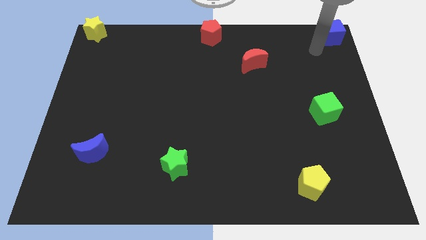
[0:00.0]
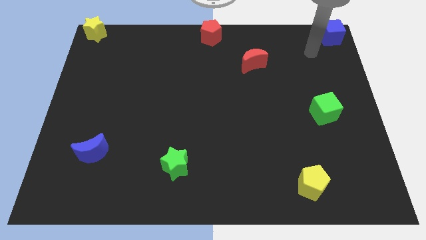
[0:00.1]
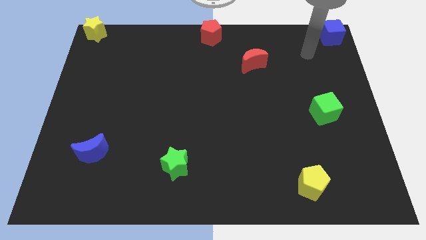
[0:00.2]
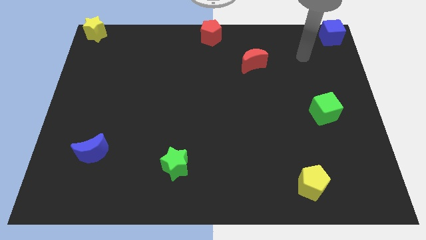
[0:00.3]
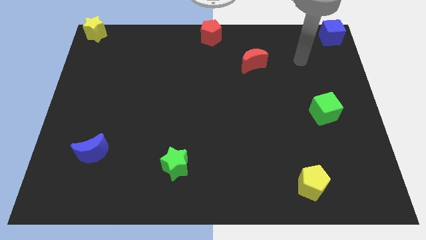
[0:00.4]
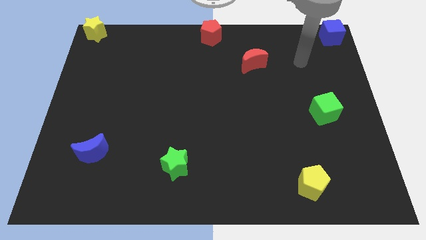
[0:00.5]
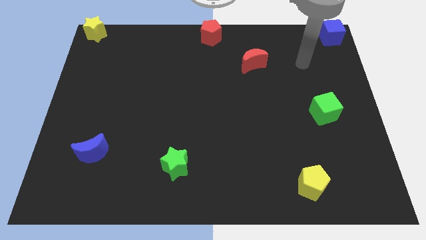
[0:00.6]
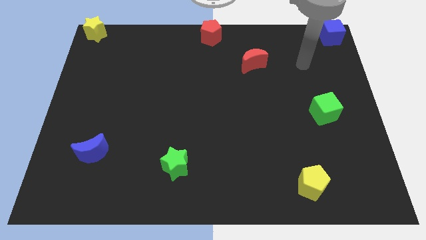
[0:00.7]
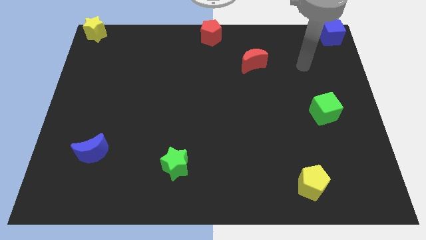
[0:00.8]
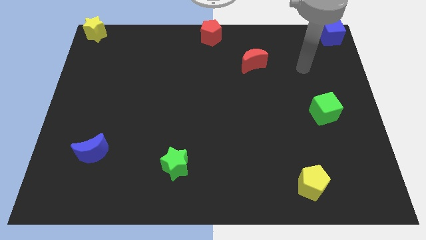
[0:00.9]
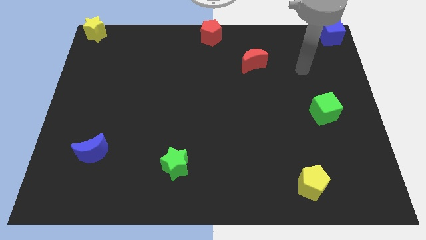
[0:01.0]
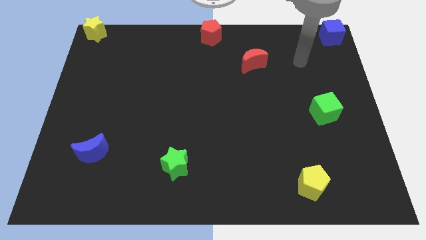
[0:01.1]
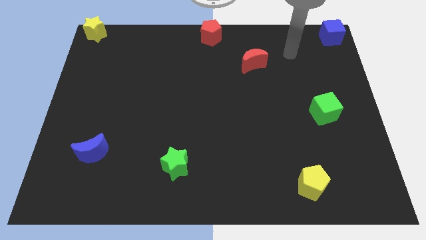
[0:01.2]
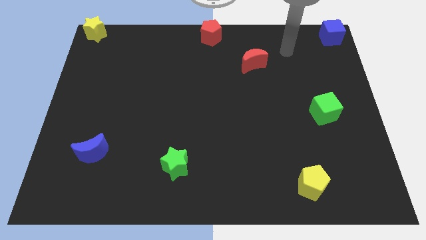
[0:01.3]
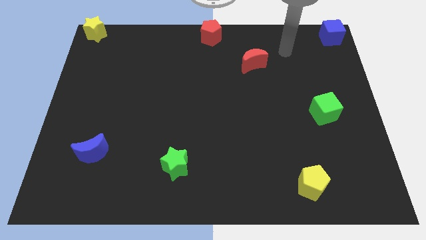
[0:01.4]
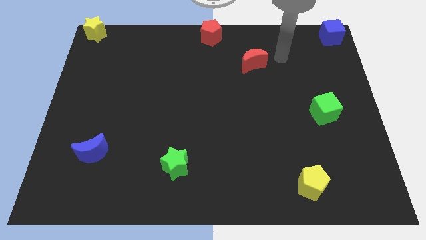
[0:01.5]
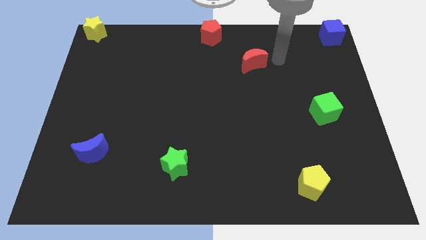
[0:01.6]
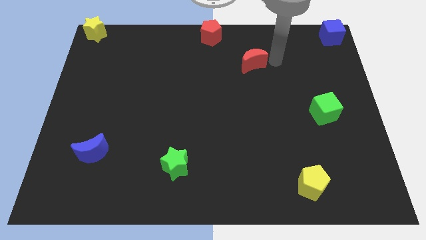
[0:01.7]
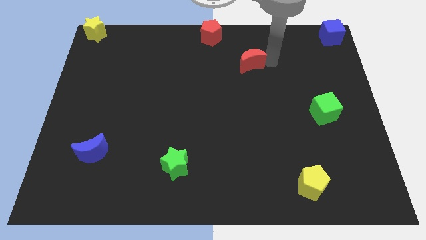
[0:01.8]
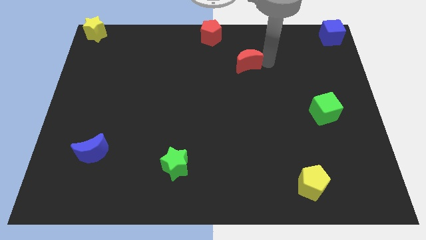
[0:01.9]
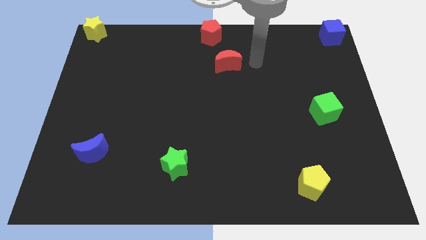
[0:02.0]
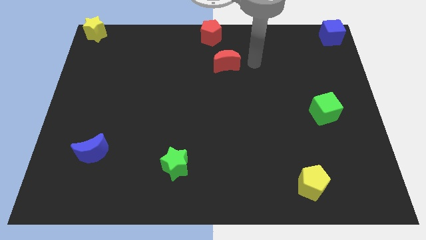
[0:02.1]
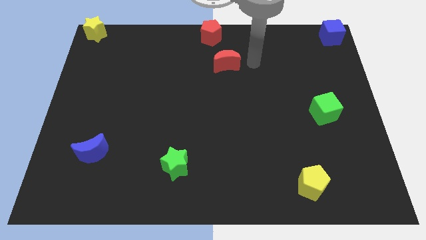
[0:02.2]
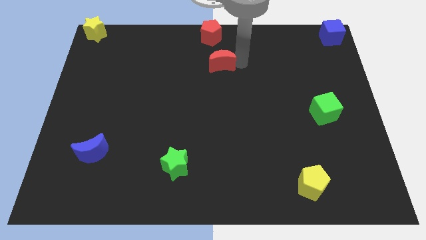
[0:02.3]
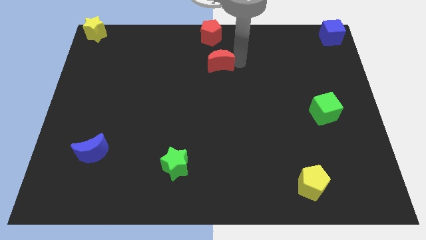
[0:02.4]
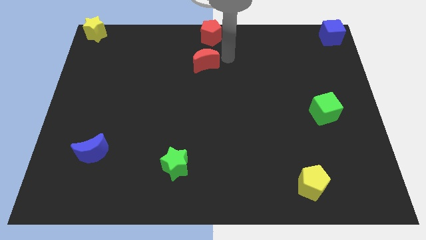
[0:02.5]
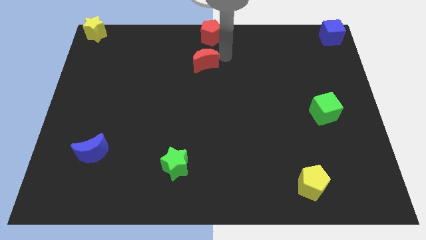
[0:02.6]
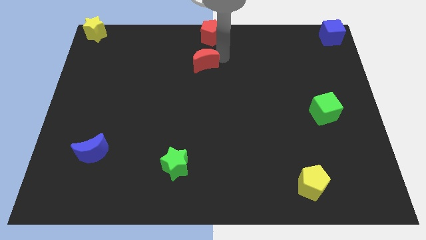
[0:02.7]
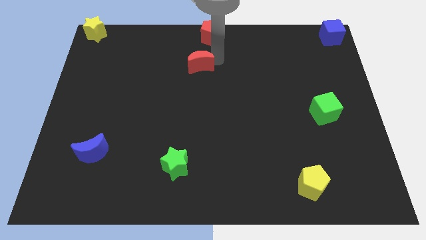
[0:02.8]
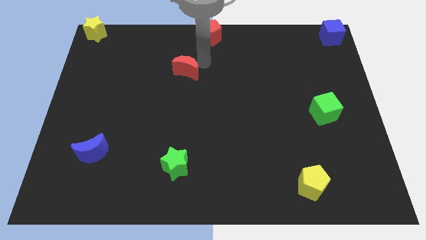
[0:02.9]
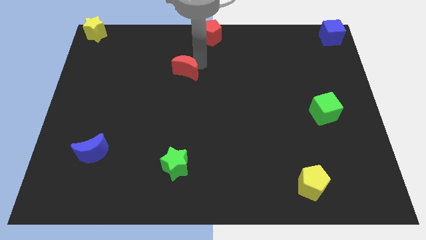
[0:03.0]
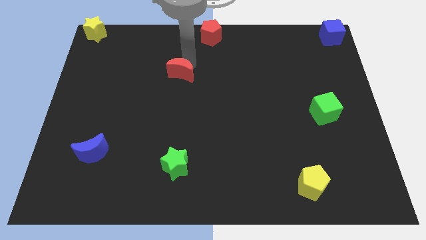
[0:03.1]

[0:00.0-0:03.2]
push the red crescent vertically above the green star

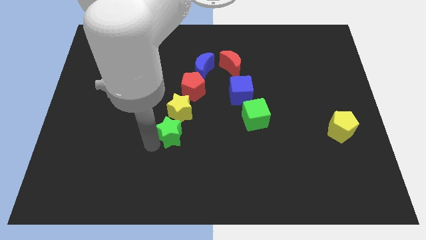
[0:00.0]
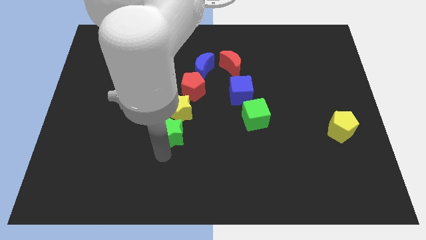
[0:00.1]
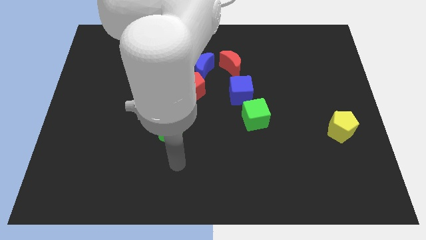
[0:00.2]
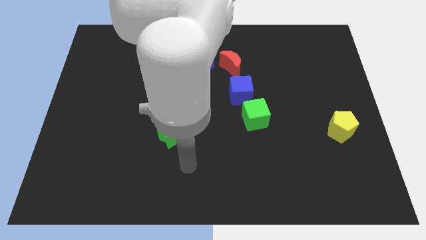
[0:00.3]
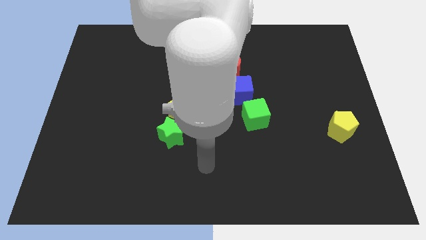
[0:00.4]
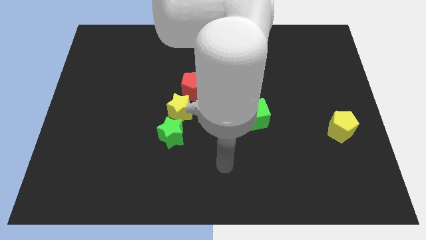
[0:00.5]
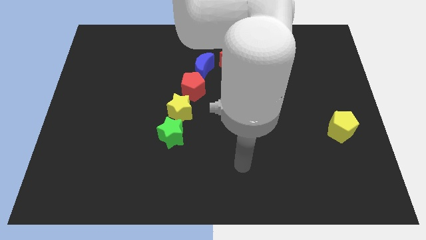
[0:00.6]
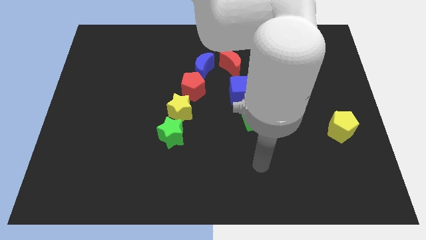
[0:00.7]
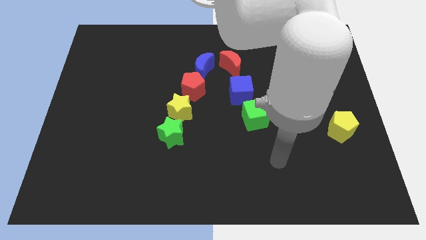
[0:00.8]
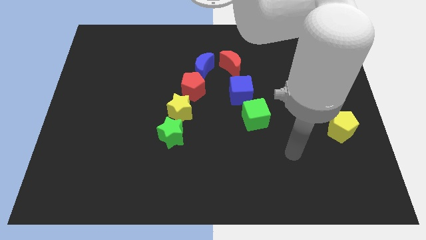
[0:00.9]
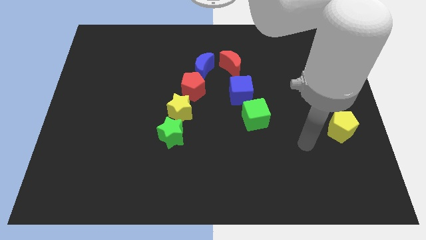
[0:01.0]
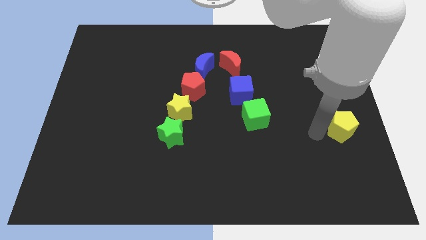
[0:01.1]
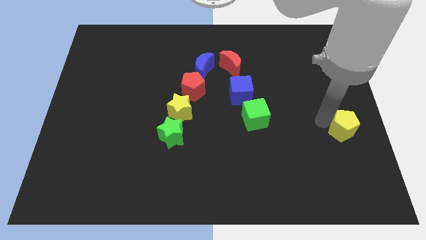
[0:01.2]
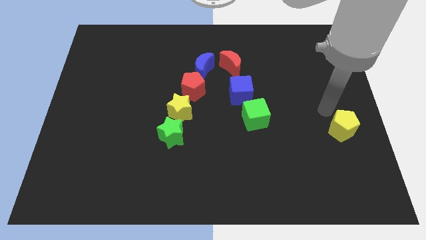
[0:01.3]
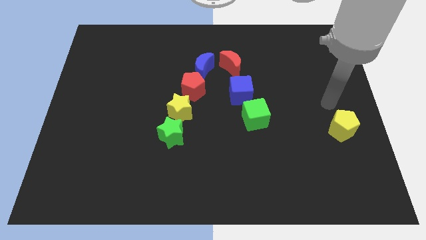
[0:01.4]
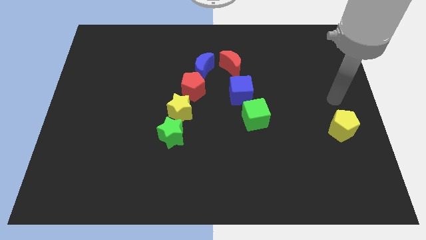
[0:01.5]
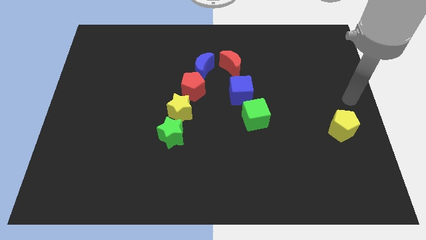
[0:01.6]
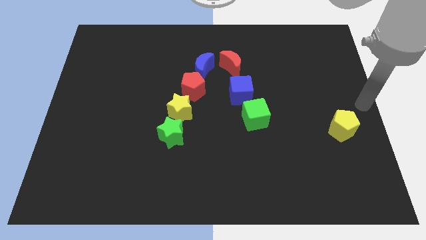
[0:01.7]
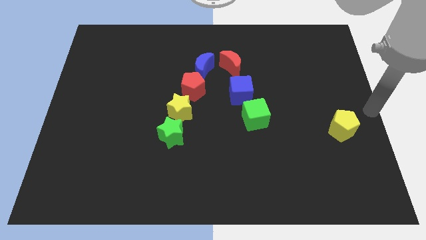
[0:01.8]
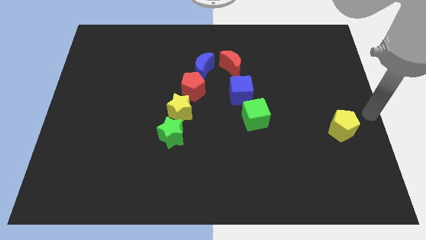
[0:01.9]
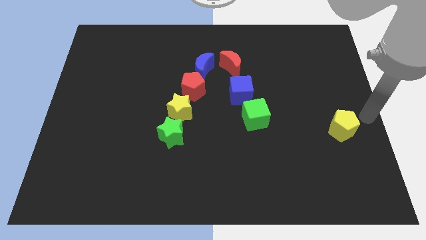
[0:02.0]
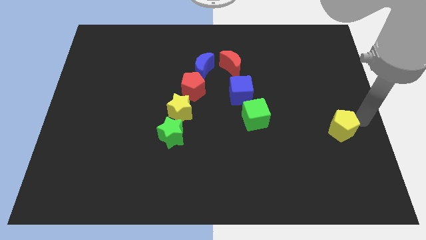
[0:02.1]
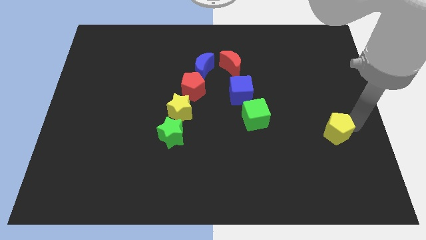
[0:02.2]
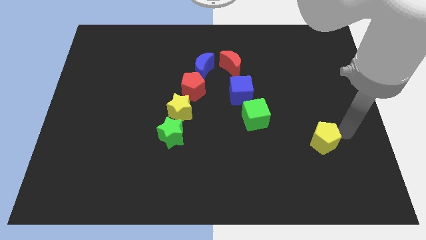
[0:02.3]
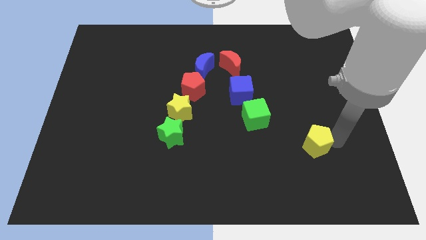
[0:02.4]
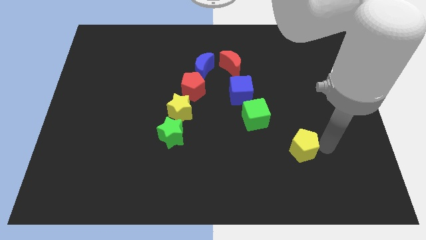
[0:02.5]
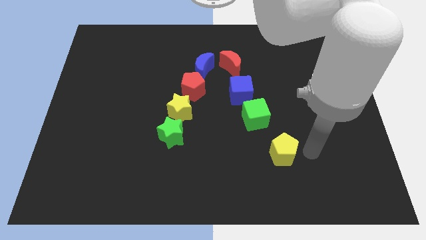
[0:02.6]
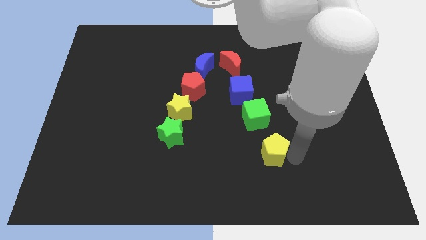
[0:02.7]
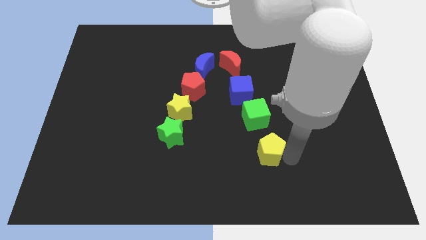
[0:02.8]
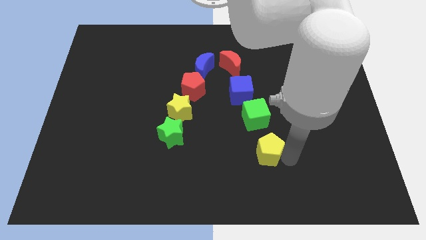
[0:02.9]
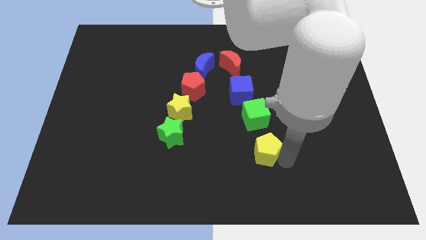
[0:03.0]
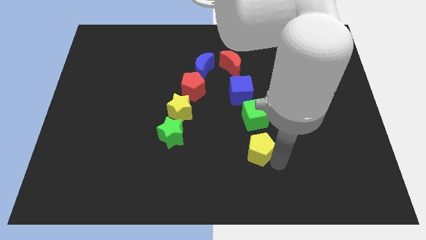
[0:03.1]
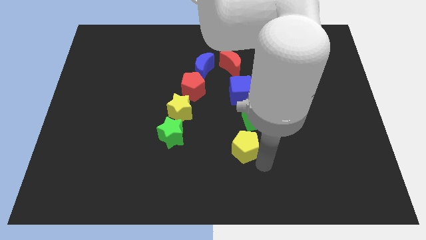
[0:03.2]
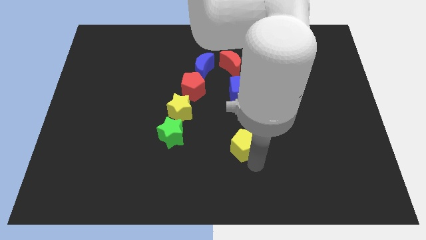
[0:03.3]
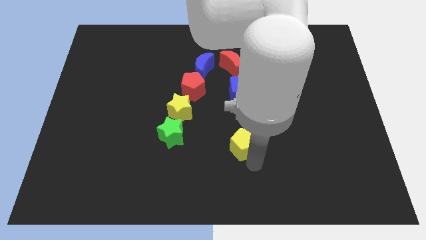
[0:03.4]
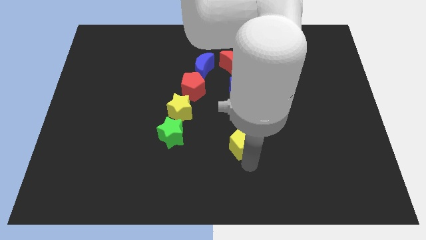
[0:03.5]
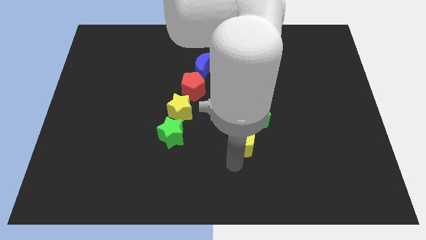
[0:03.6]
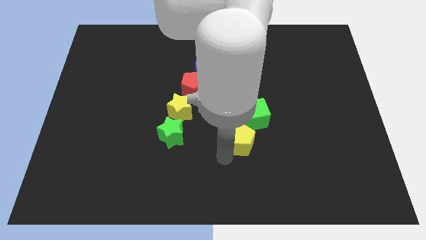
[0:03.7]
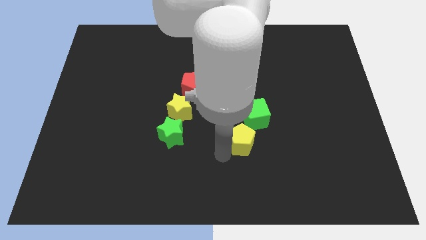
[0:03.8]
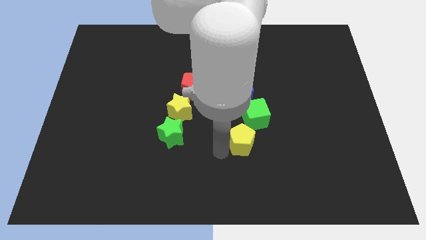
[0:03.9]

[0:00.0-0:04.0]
slide the yellow pentagon near to the bottom side of the green cube

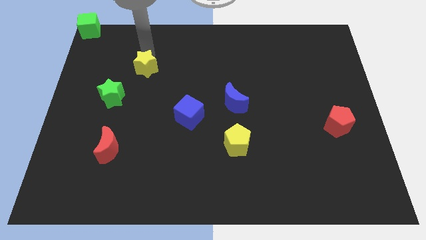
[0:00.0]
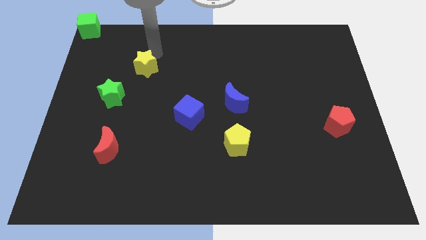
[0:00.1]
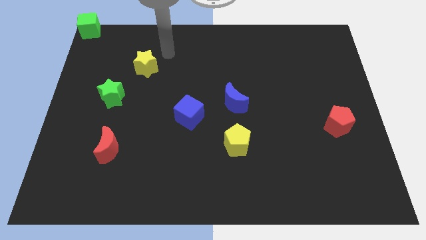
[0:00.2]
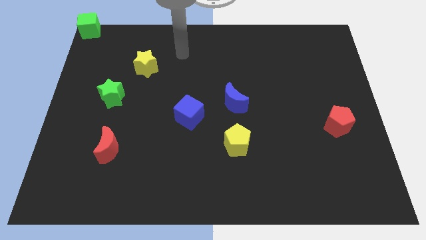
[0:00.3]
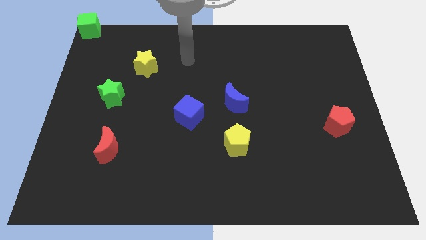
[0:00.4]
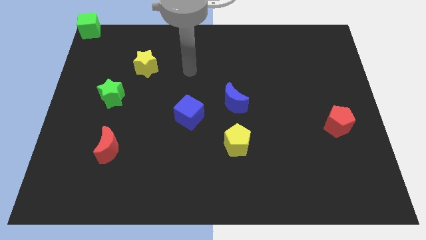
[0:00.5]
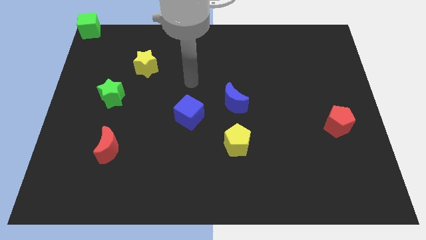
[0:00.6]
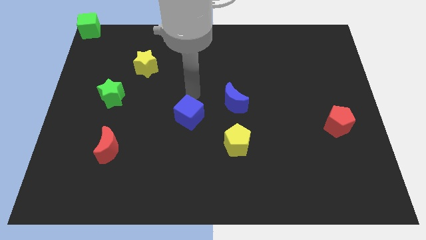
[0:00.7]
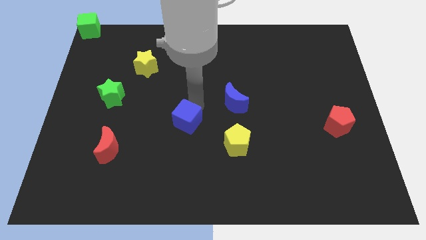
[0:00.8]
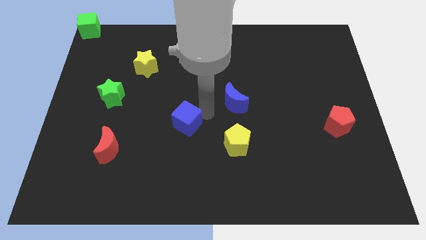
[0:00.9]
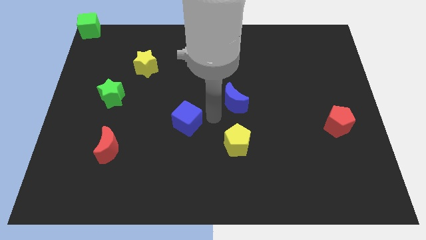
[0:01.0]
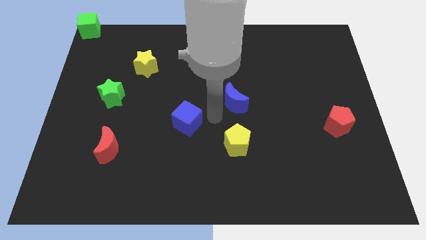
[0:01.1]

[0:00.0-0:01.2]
slightly move the blue moon to the right side

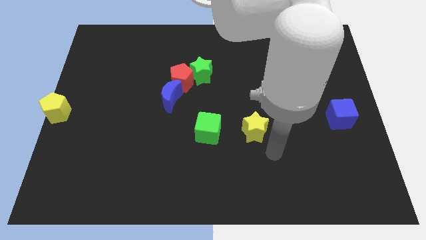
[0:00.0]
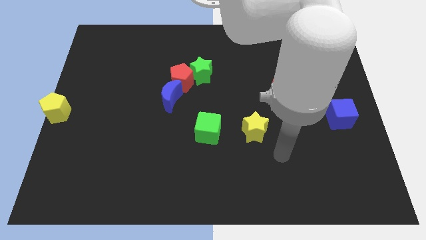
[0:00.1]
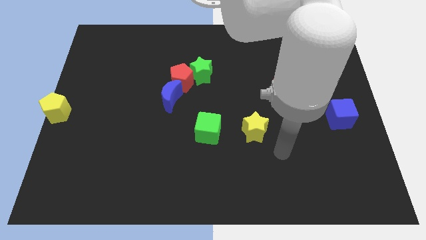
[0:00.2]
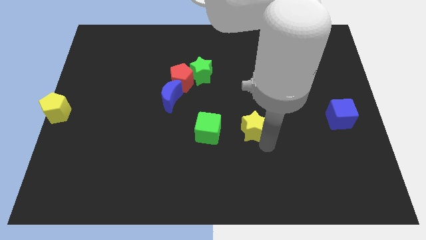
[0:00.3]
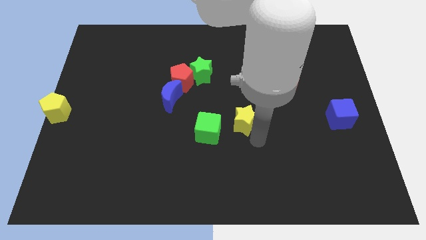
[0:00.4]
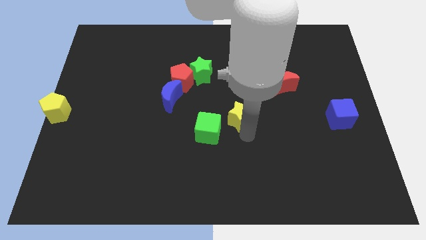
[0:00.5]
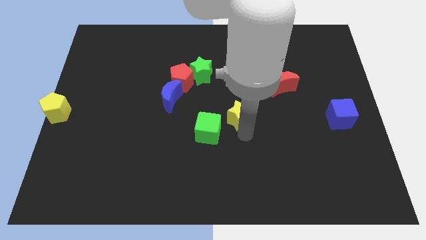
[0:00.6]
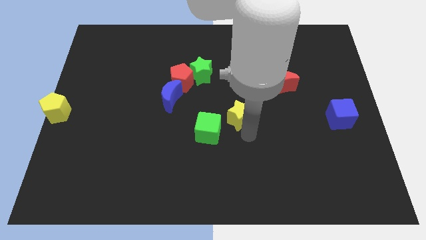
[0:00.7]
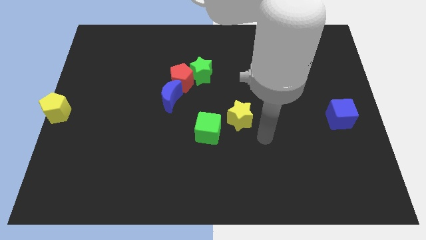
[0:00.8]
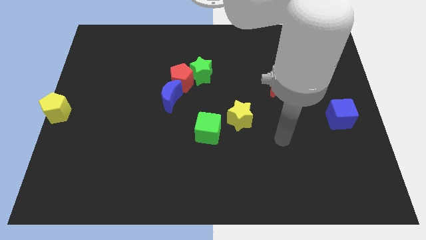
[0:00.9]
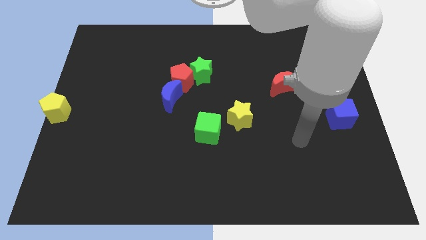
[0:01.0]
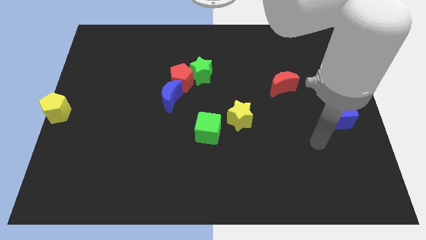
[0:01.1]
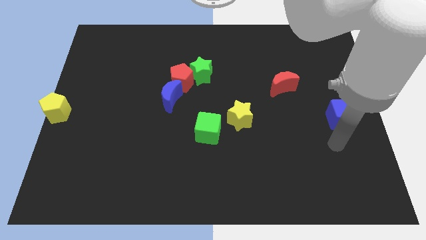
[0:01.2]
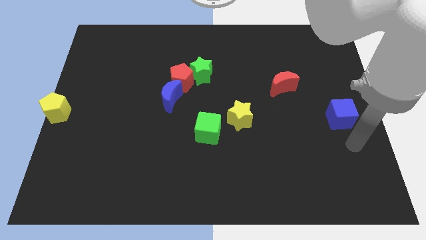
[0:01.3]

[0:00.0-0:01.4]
move your arm towards the blue cube
